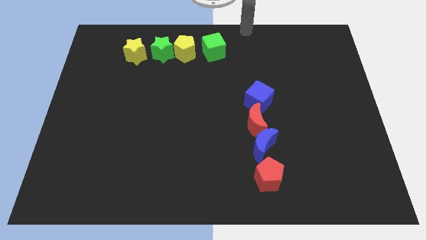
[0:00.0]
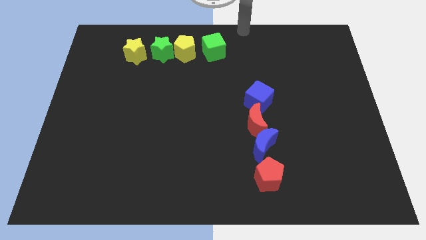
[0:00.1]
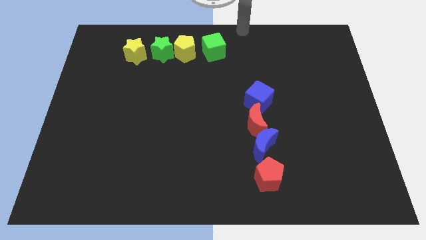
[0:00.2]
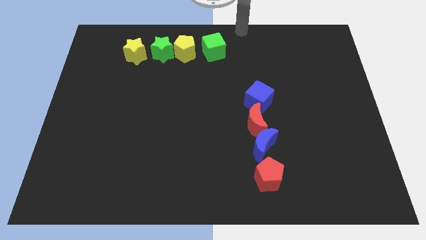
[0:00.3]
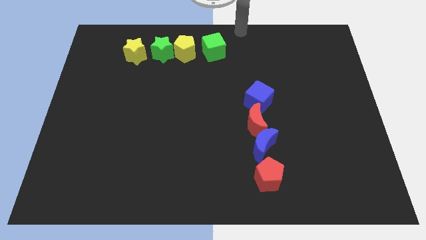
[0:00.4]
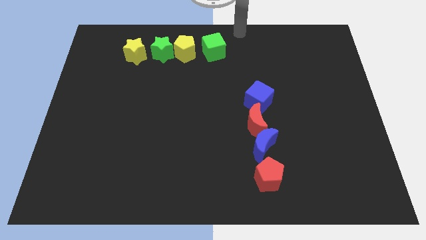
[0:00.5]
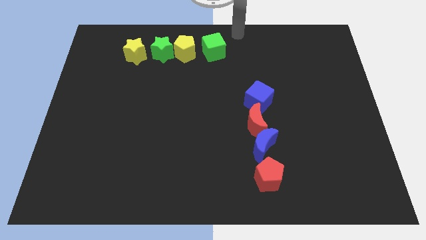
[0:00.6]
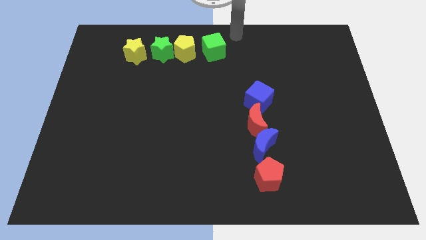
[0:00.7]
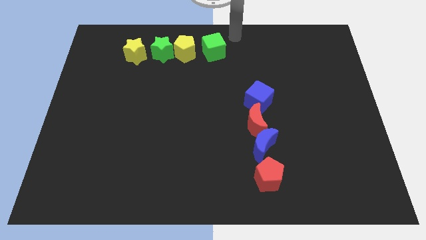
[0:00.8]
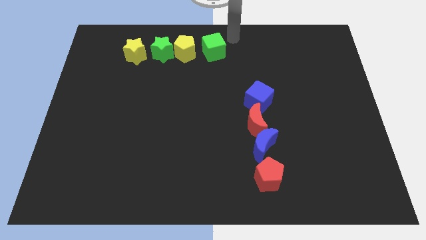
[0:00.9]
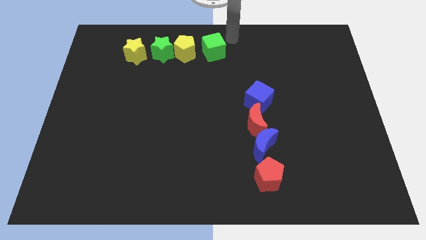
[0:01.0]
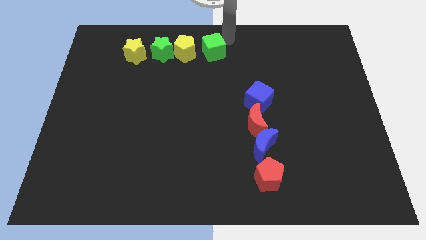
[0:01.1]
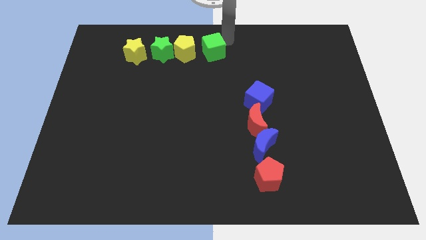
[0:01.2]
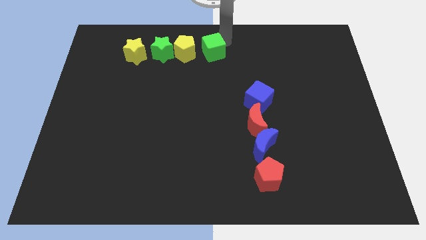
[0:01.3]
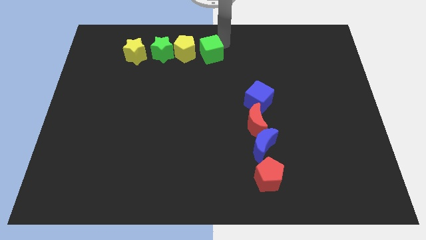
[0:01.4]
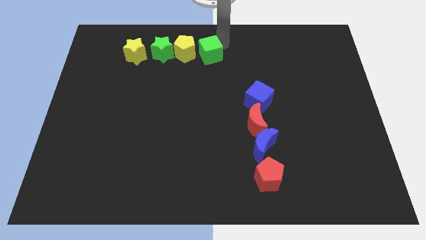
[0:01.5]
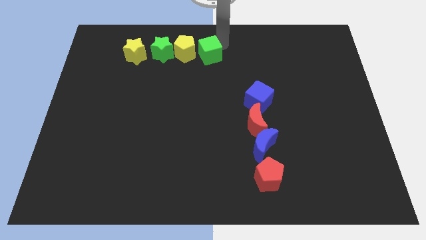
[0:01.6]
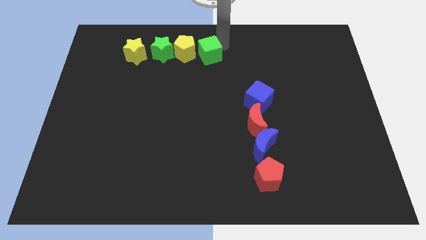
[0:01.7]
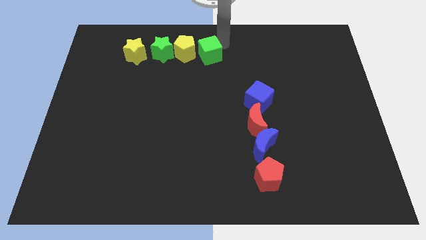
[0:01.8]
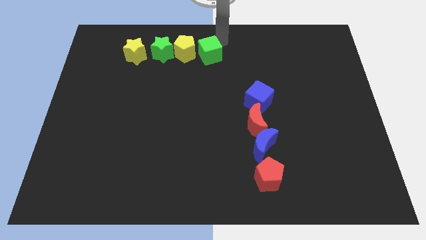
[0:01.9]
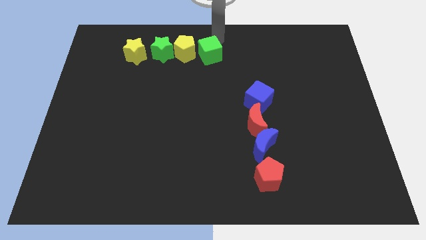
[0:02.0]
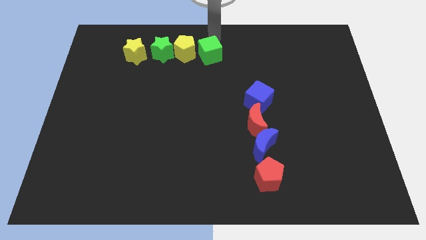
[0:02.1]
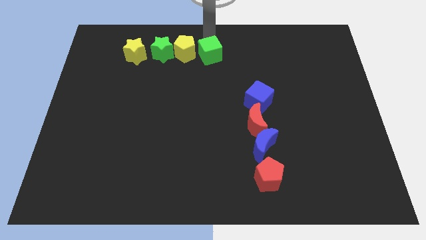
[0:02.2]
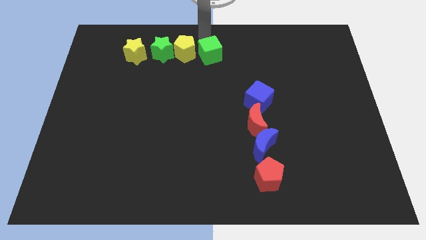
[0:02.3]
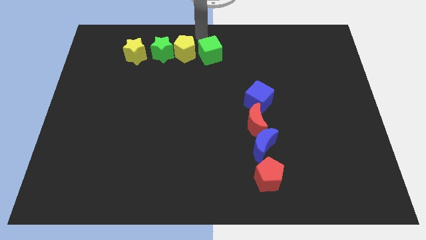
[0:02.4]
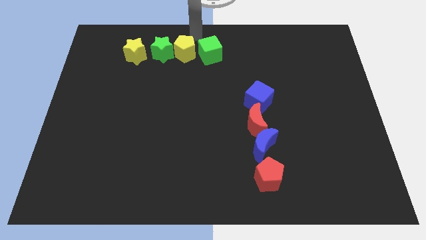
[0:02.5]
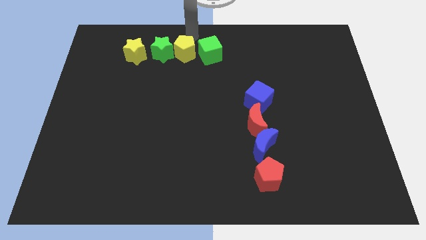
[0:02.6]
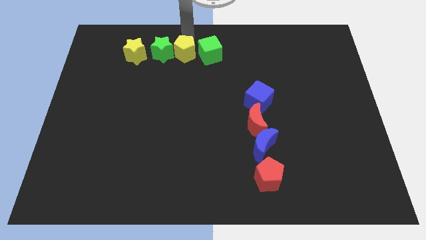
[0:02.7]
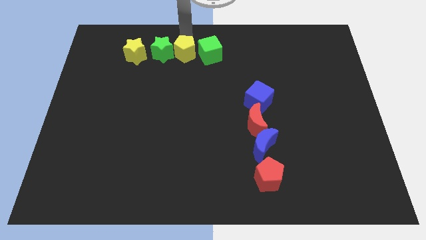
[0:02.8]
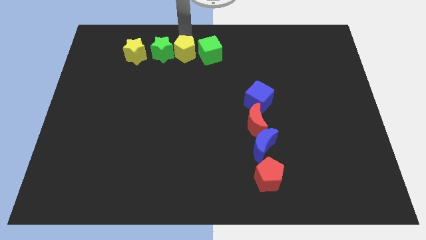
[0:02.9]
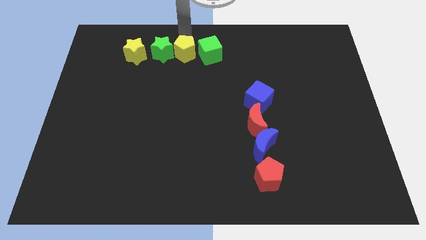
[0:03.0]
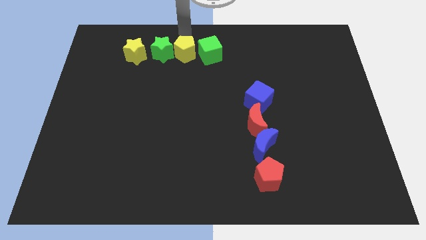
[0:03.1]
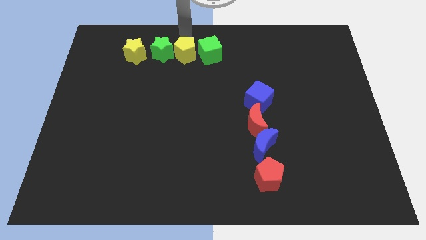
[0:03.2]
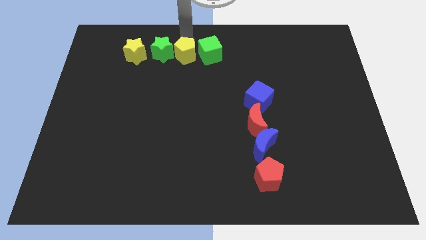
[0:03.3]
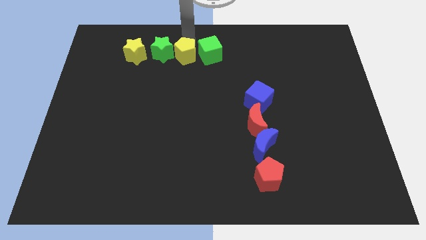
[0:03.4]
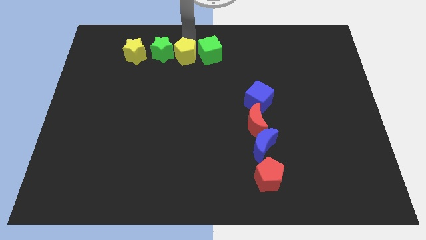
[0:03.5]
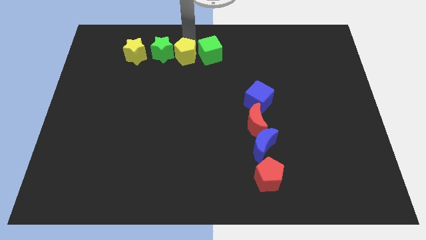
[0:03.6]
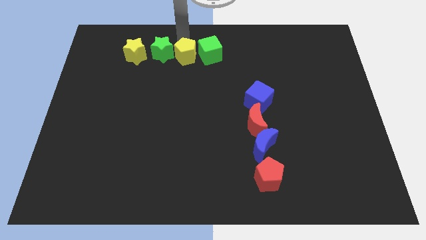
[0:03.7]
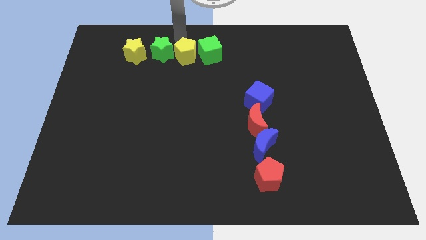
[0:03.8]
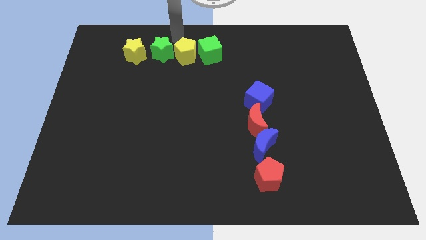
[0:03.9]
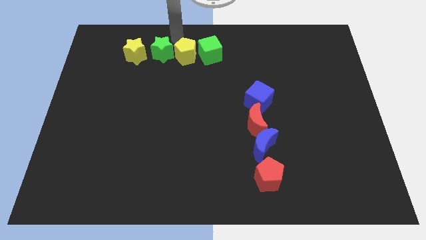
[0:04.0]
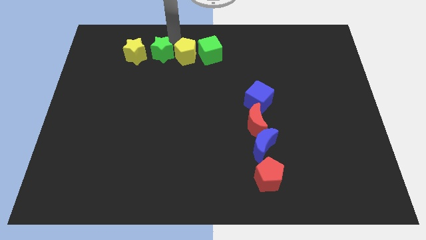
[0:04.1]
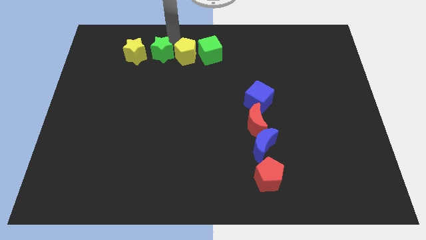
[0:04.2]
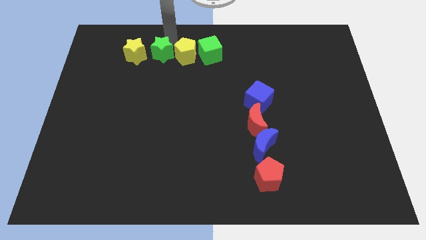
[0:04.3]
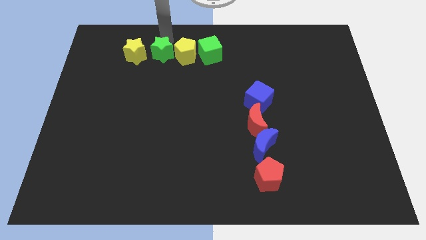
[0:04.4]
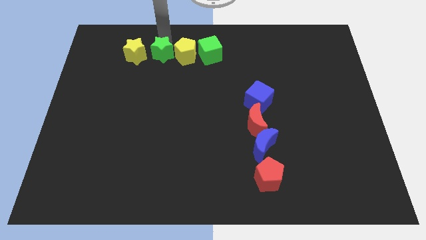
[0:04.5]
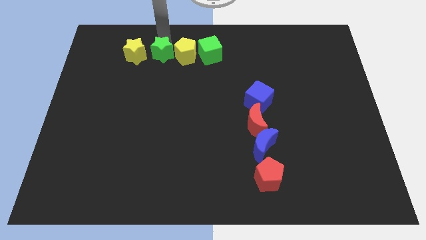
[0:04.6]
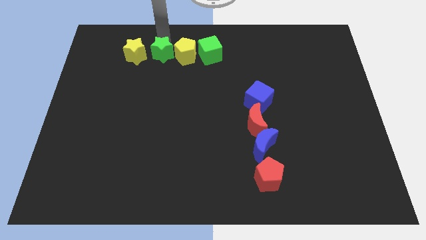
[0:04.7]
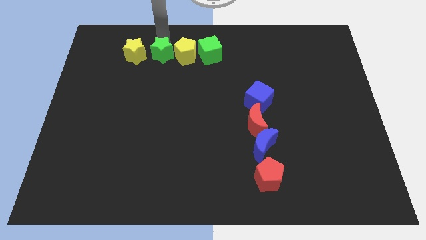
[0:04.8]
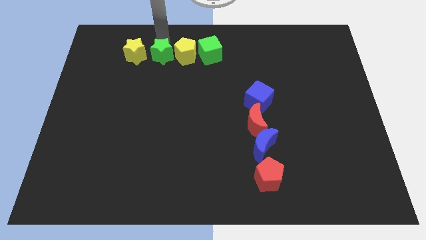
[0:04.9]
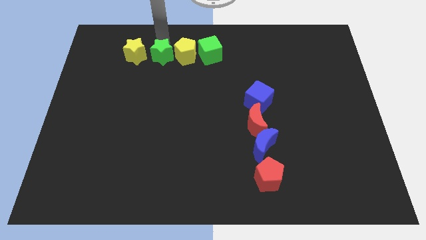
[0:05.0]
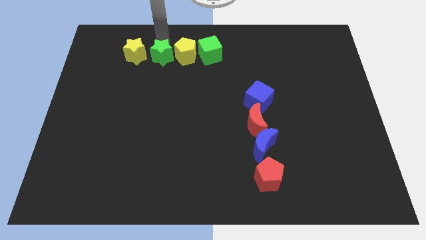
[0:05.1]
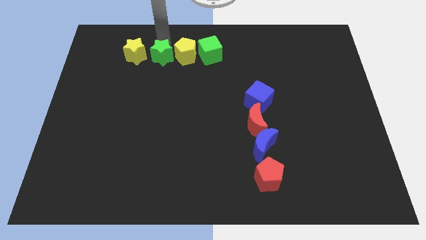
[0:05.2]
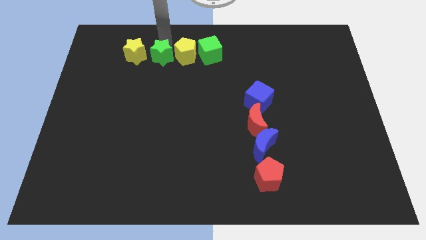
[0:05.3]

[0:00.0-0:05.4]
adjust the green blocks and the yellow pentagon to form a horizontal line

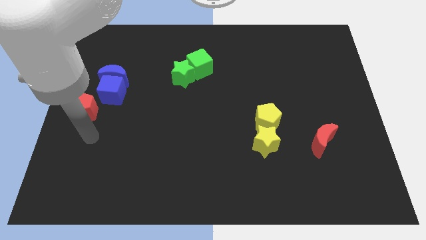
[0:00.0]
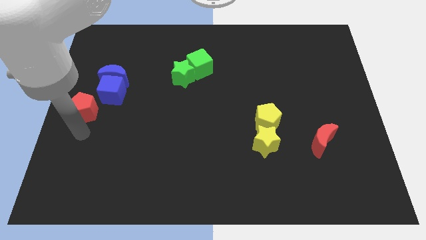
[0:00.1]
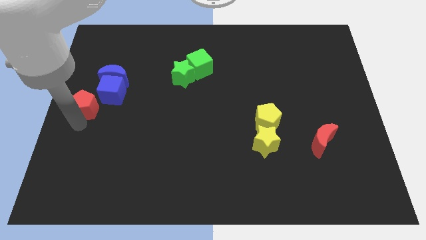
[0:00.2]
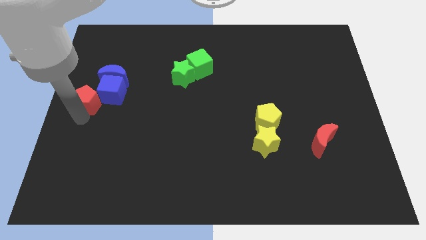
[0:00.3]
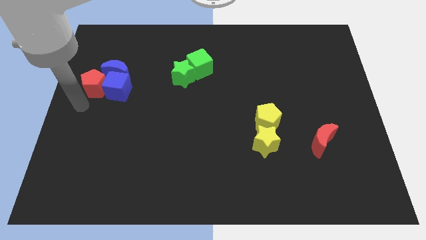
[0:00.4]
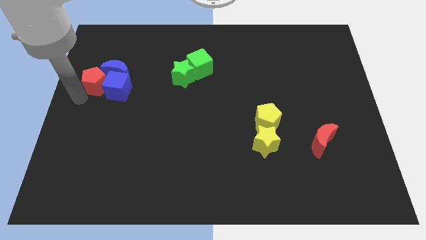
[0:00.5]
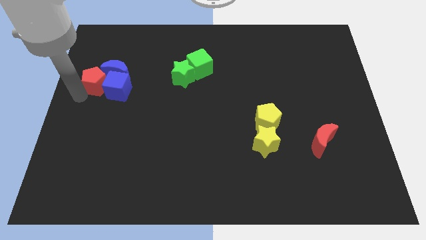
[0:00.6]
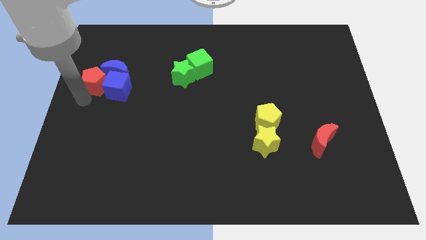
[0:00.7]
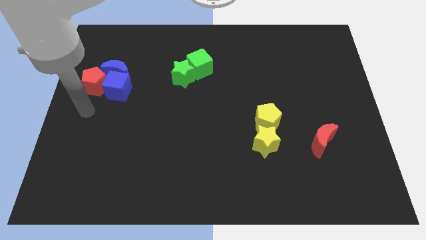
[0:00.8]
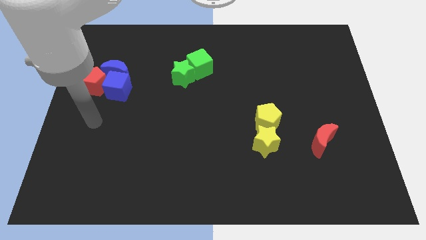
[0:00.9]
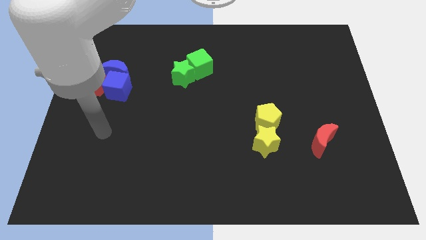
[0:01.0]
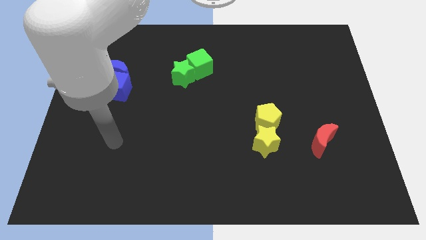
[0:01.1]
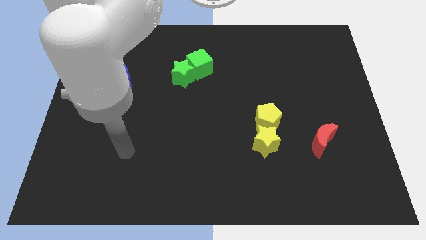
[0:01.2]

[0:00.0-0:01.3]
push the red pentagon left to the blue cube

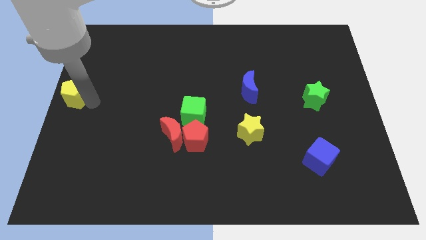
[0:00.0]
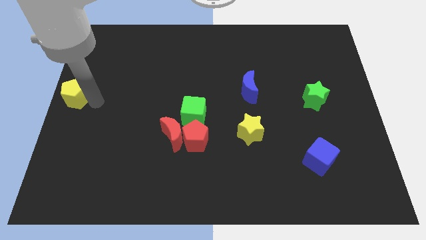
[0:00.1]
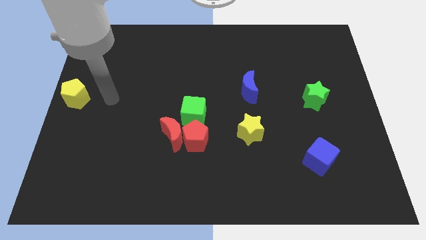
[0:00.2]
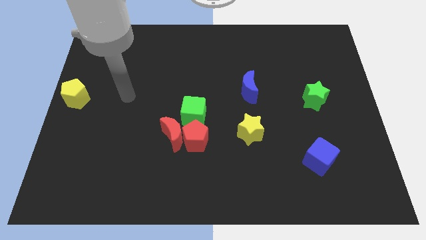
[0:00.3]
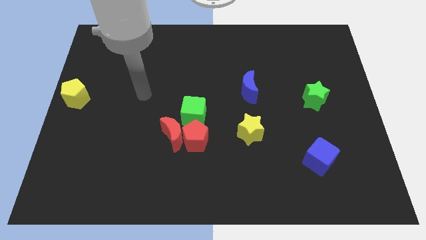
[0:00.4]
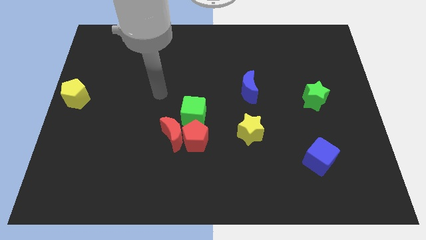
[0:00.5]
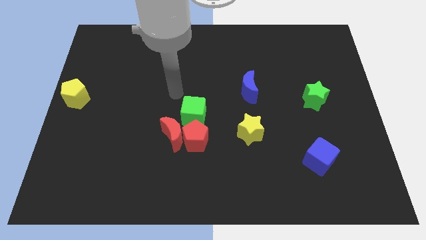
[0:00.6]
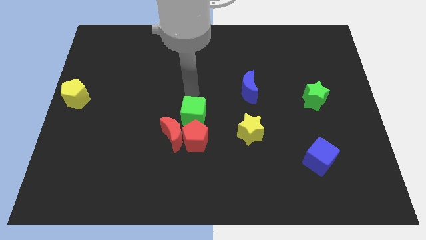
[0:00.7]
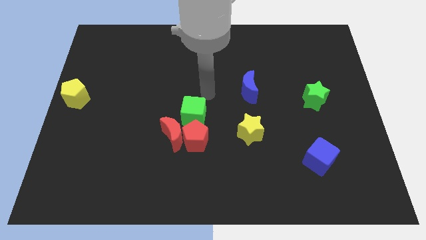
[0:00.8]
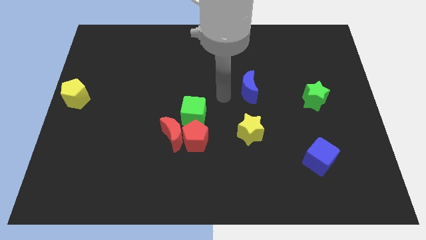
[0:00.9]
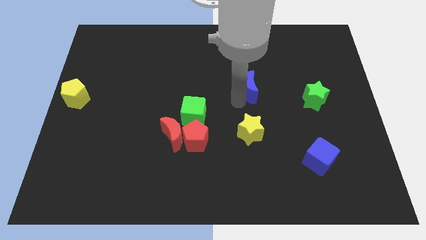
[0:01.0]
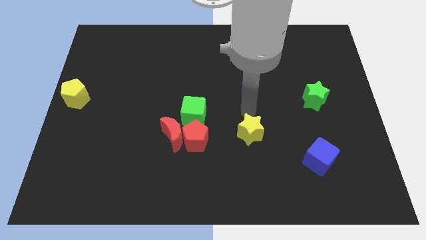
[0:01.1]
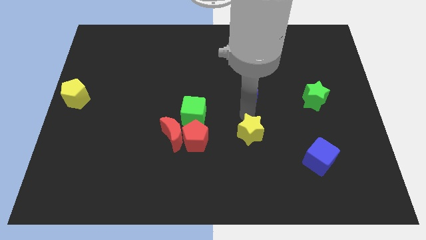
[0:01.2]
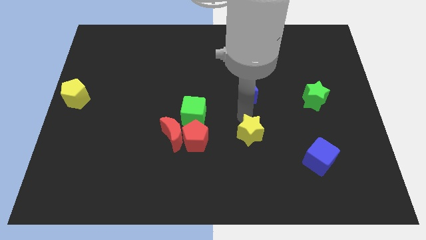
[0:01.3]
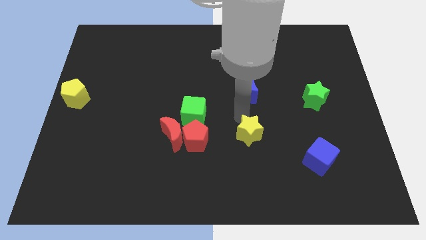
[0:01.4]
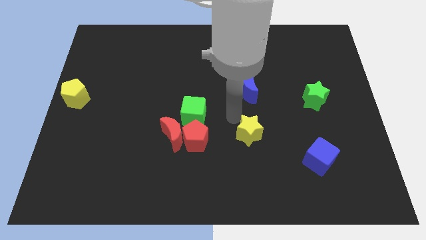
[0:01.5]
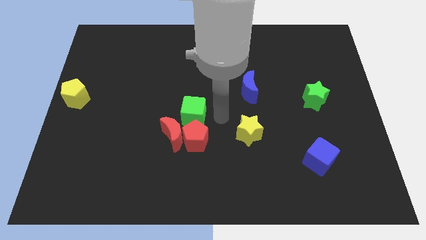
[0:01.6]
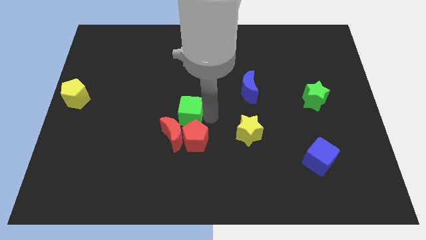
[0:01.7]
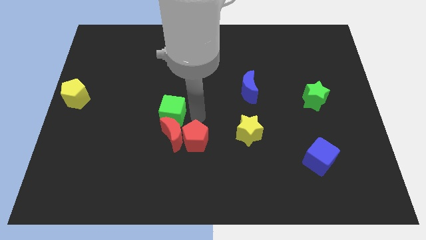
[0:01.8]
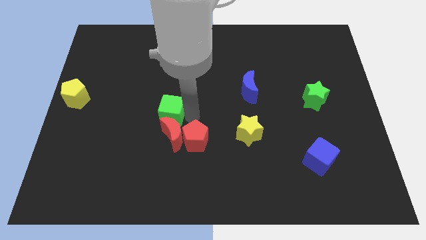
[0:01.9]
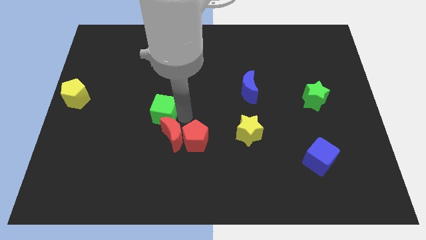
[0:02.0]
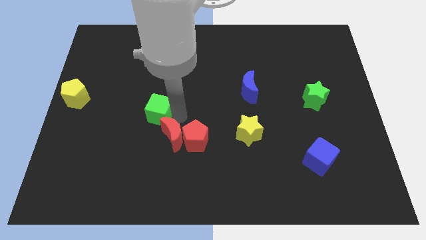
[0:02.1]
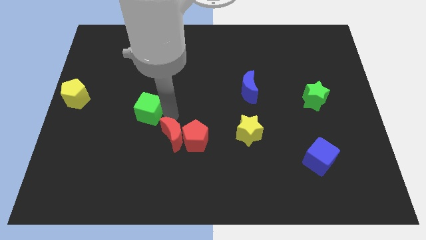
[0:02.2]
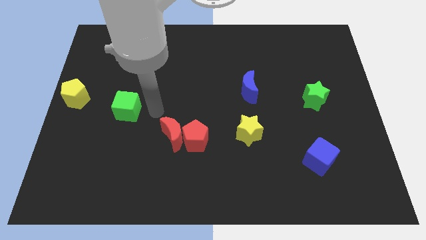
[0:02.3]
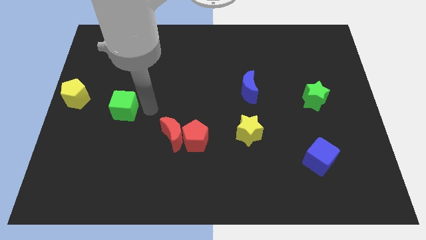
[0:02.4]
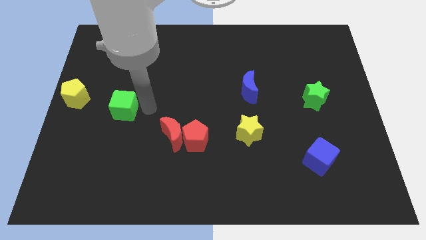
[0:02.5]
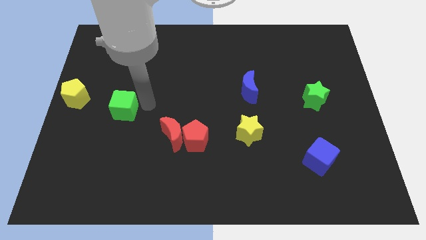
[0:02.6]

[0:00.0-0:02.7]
move green cube from the center of the board
